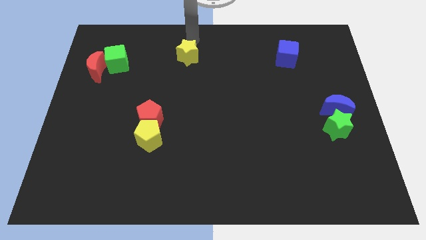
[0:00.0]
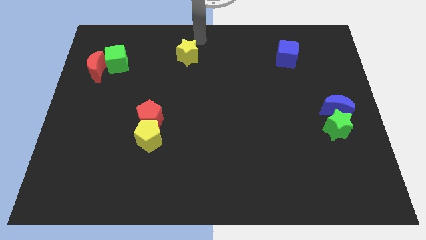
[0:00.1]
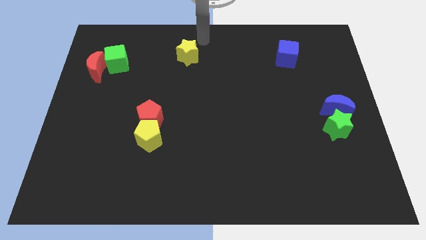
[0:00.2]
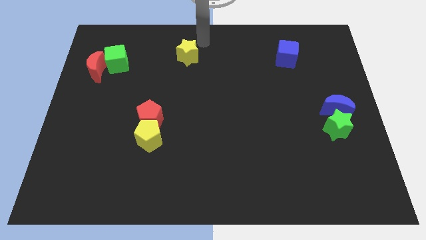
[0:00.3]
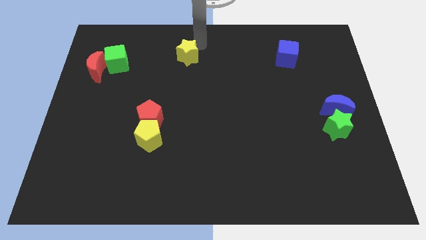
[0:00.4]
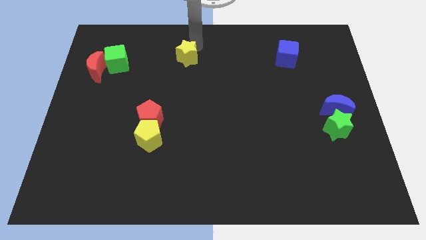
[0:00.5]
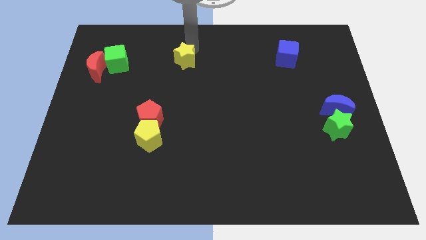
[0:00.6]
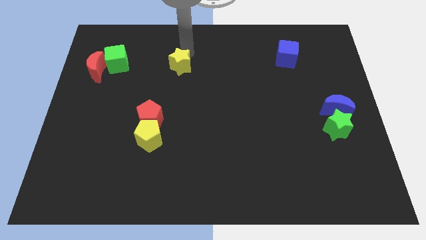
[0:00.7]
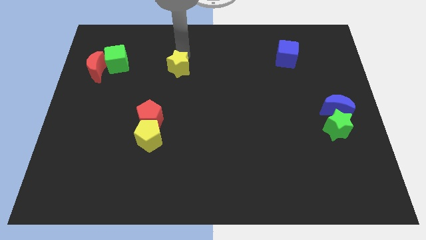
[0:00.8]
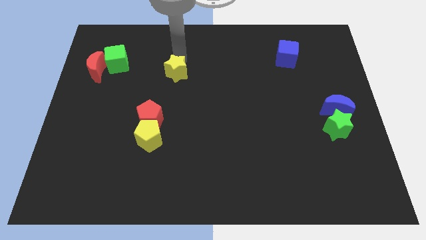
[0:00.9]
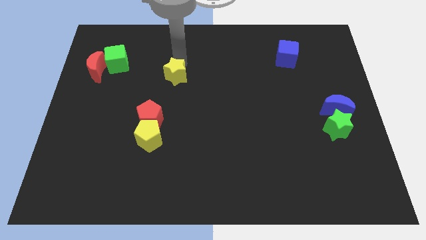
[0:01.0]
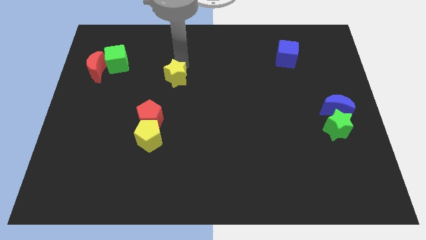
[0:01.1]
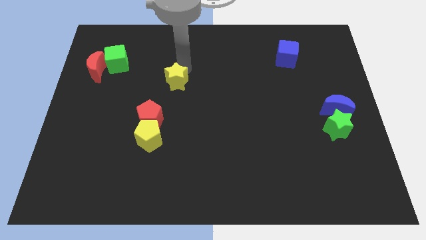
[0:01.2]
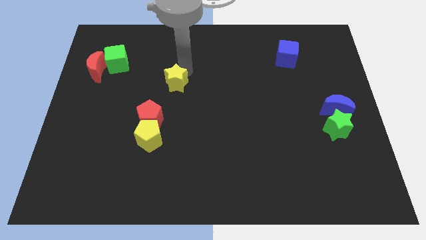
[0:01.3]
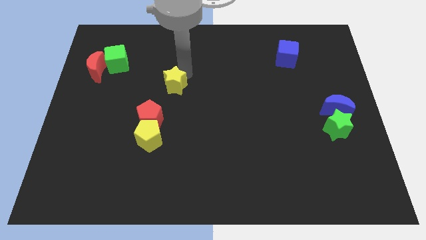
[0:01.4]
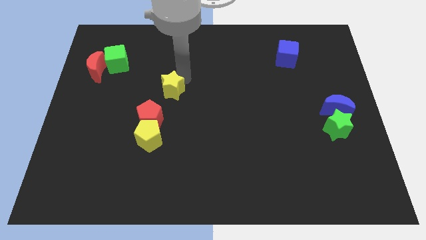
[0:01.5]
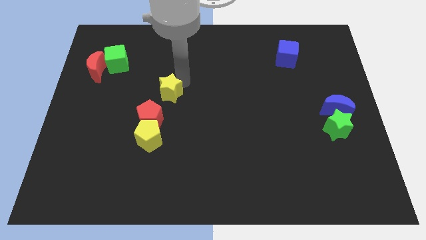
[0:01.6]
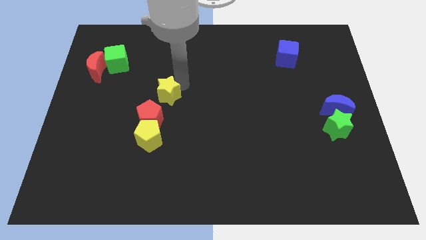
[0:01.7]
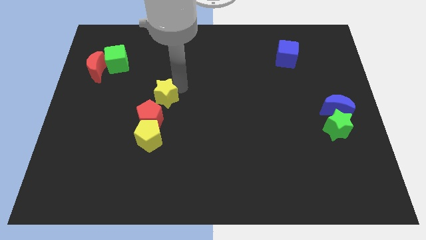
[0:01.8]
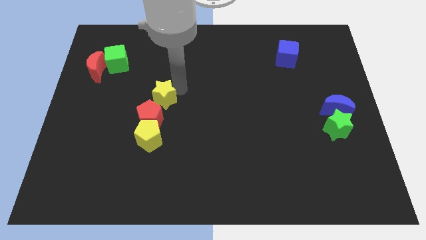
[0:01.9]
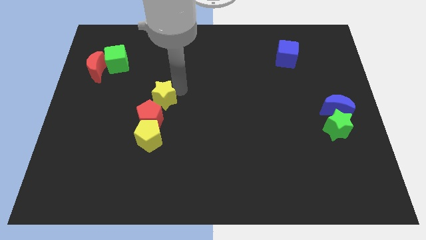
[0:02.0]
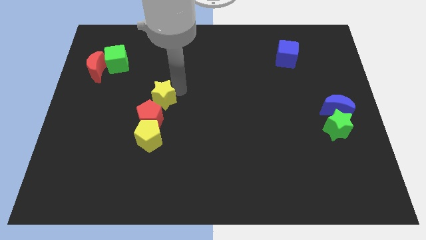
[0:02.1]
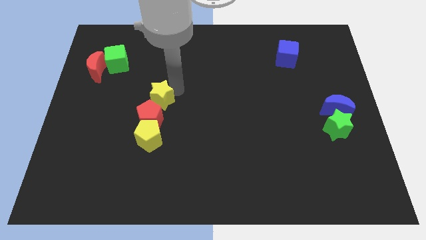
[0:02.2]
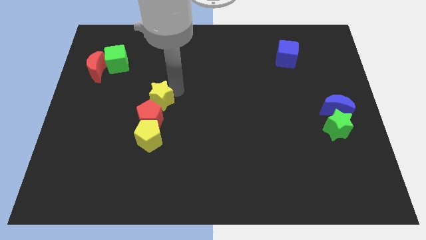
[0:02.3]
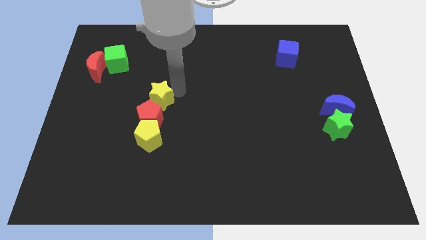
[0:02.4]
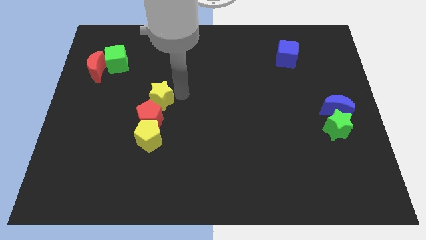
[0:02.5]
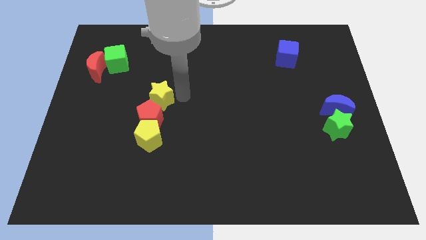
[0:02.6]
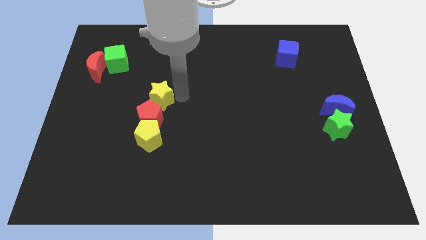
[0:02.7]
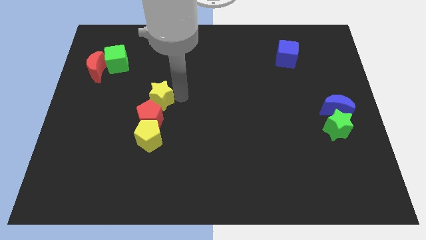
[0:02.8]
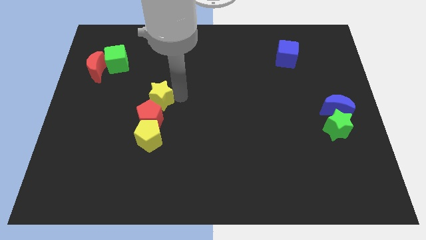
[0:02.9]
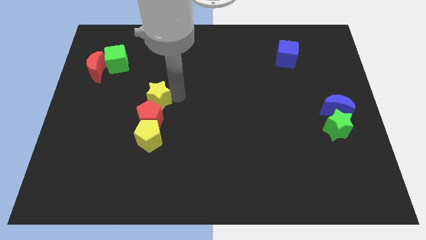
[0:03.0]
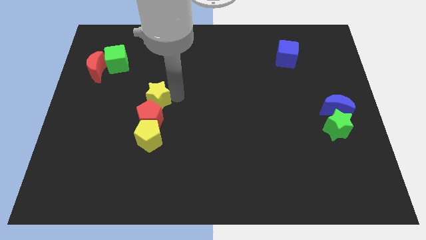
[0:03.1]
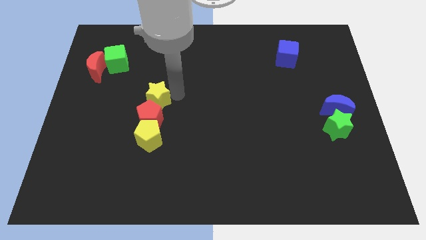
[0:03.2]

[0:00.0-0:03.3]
push the yellow star above the red pentagon

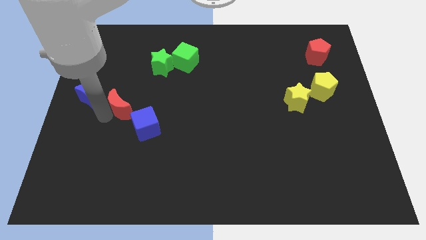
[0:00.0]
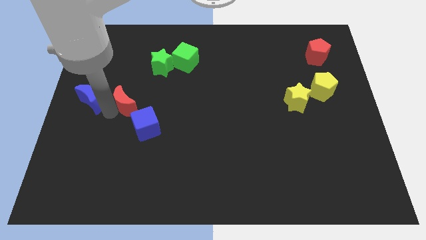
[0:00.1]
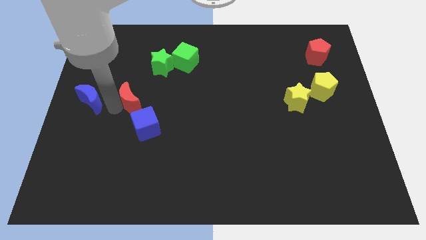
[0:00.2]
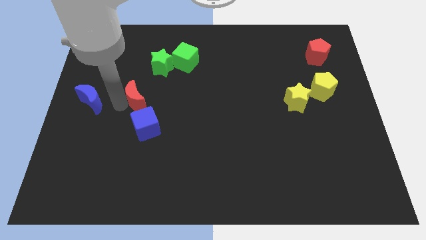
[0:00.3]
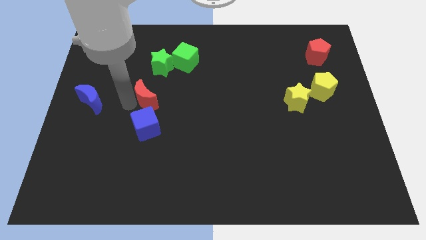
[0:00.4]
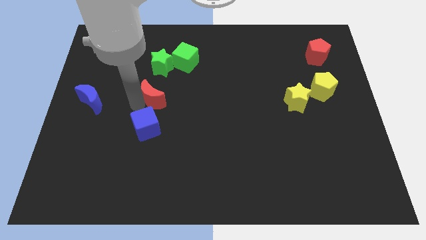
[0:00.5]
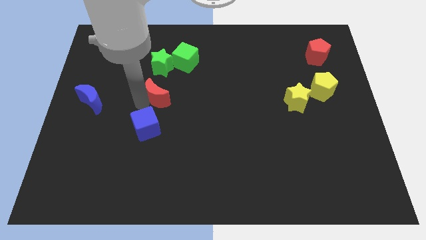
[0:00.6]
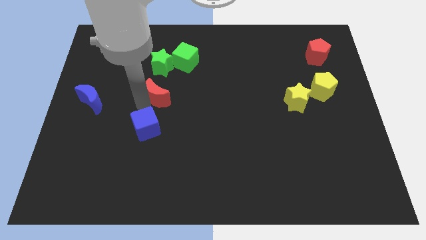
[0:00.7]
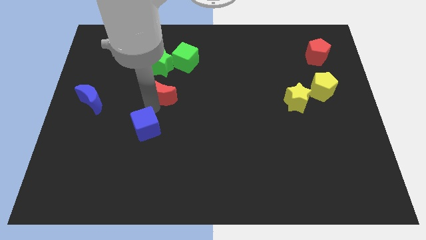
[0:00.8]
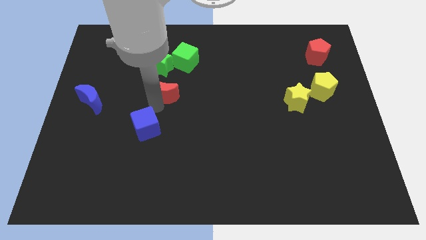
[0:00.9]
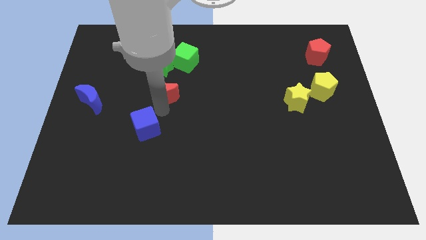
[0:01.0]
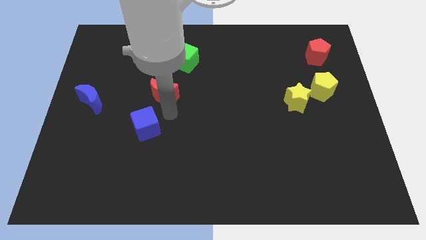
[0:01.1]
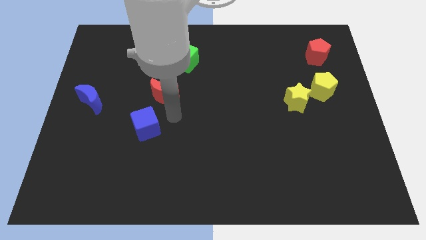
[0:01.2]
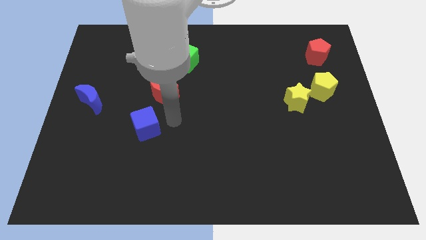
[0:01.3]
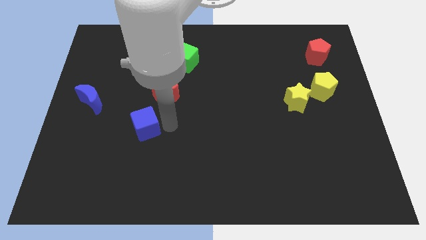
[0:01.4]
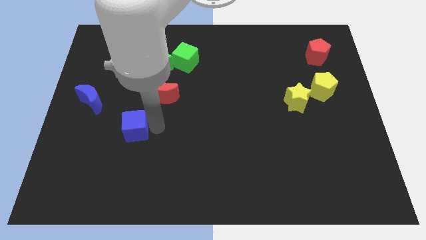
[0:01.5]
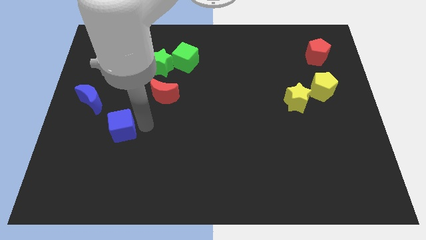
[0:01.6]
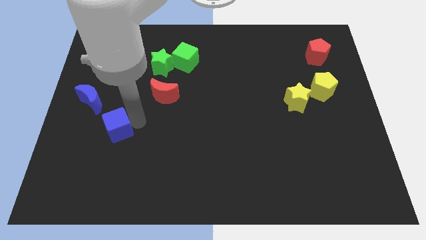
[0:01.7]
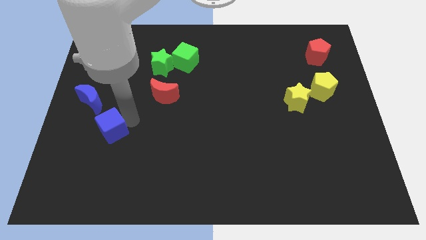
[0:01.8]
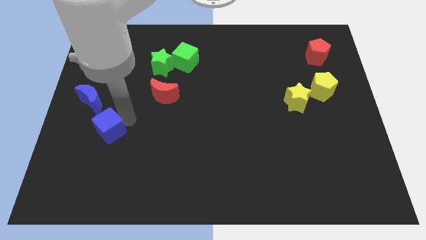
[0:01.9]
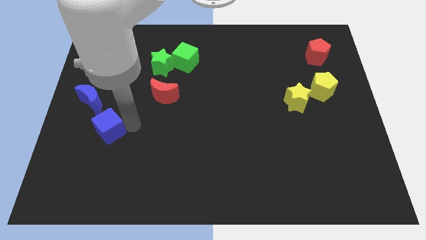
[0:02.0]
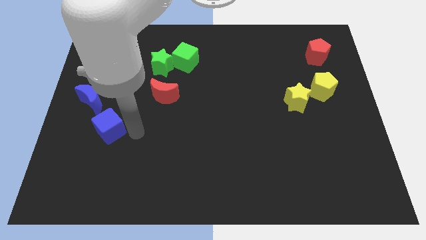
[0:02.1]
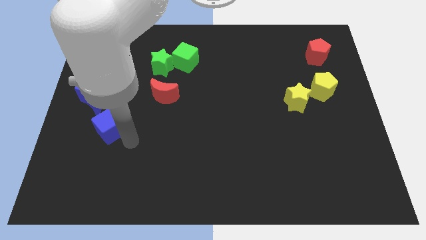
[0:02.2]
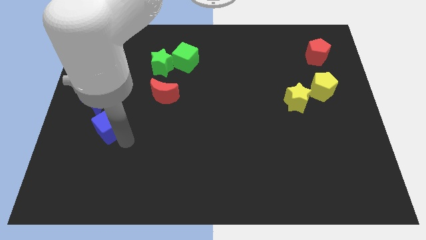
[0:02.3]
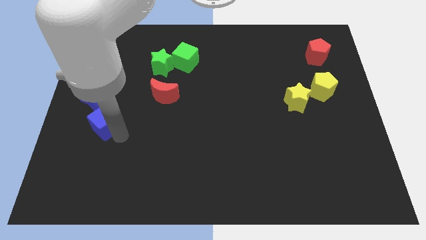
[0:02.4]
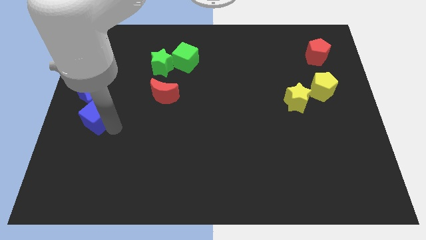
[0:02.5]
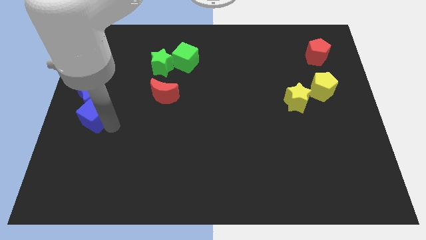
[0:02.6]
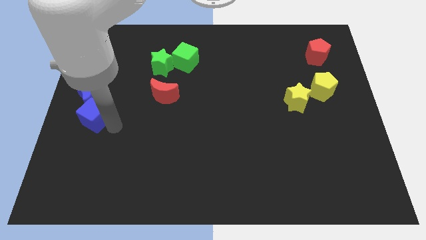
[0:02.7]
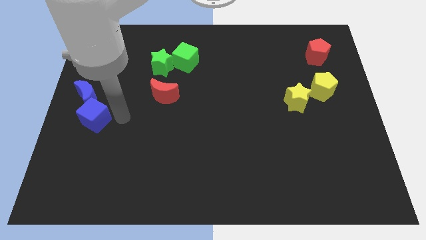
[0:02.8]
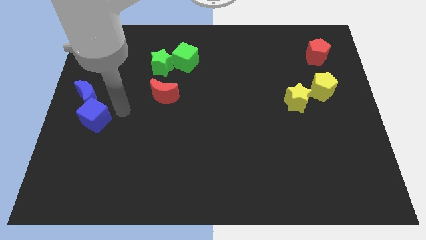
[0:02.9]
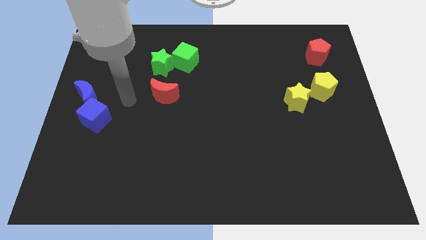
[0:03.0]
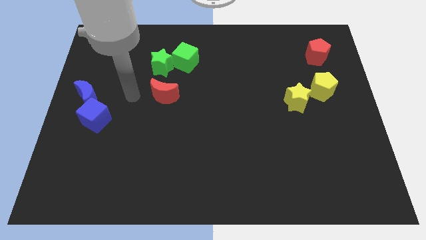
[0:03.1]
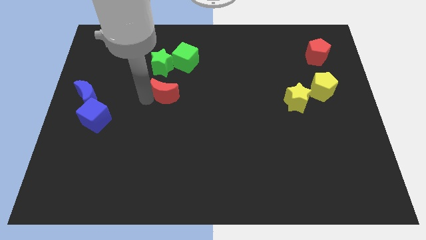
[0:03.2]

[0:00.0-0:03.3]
place blue cube to the bottom of blue moon

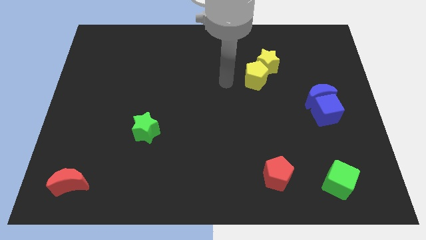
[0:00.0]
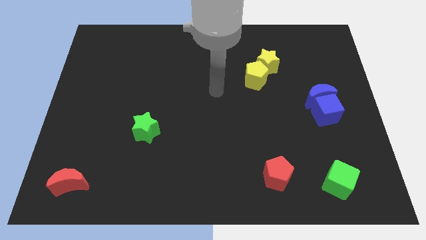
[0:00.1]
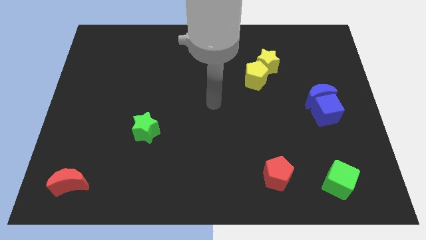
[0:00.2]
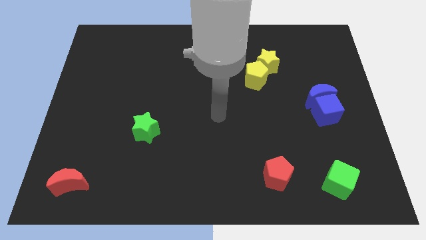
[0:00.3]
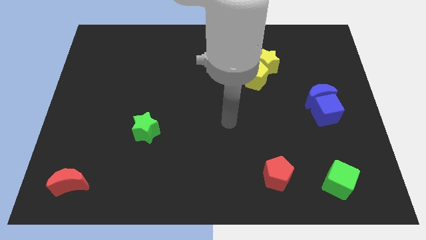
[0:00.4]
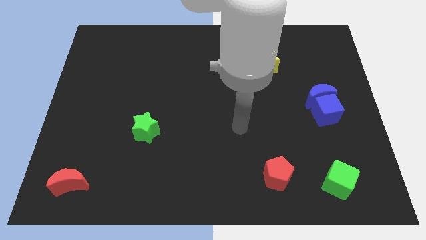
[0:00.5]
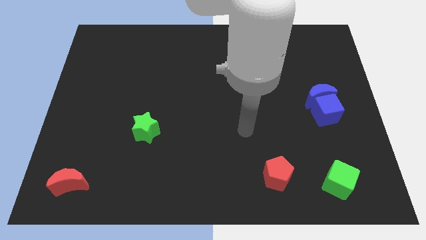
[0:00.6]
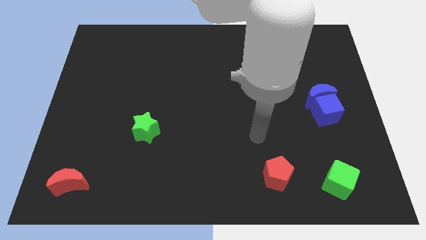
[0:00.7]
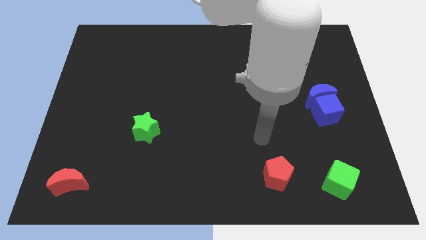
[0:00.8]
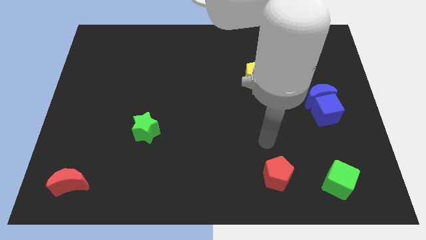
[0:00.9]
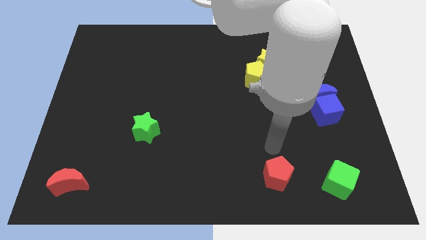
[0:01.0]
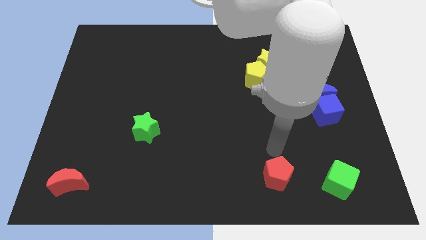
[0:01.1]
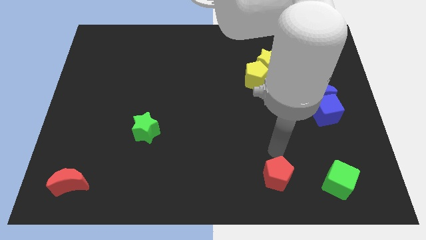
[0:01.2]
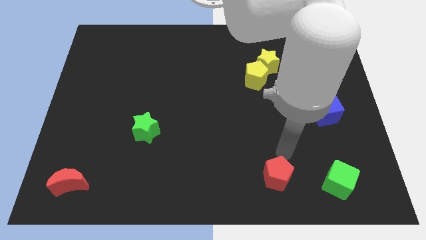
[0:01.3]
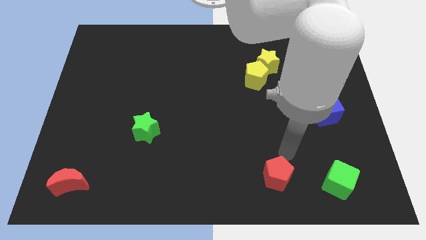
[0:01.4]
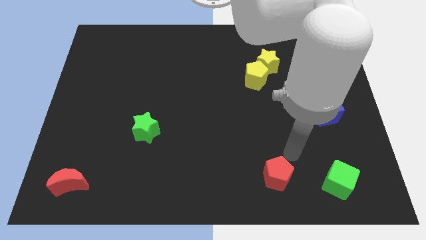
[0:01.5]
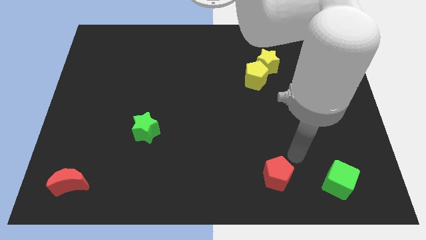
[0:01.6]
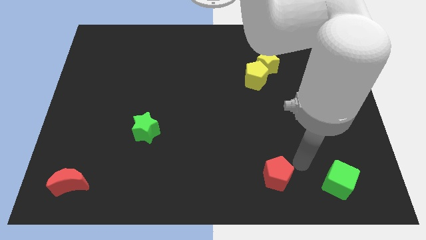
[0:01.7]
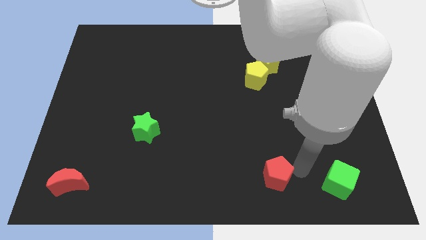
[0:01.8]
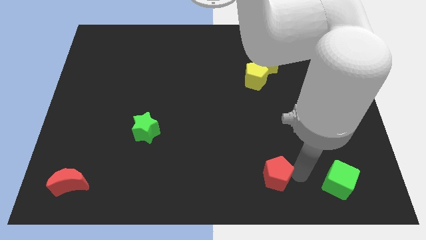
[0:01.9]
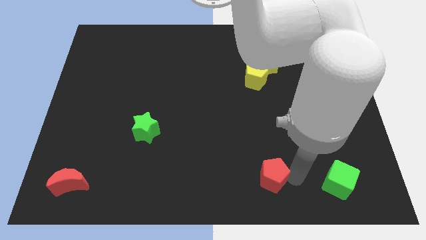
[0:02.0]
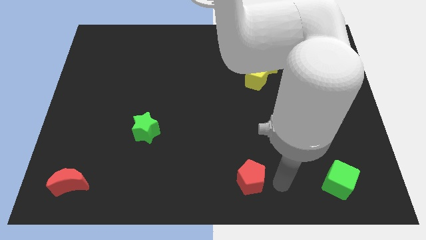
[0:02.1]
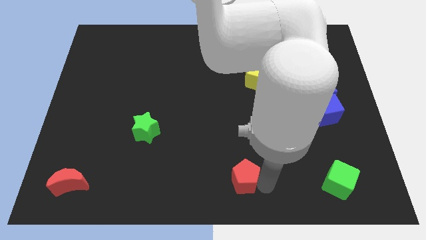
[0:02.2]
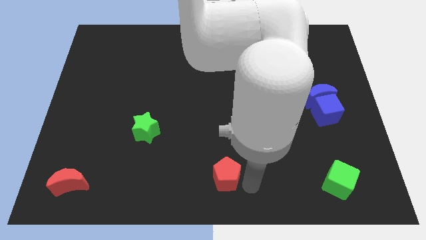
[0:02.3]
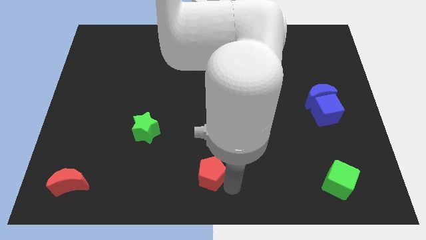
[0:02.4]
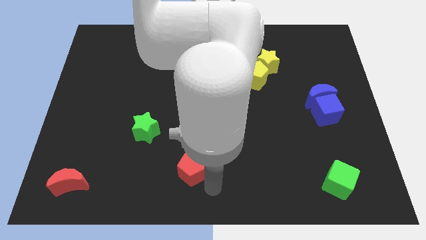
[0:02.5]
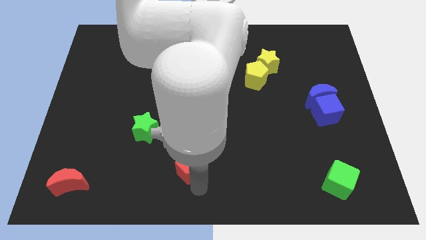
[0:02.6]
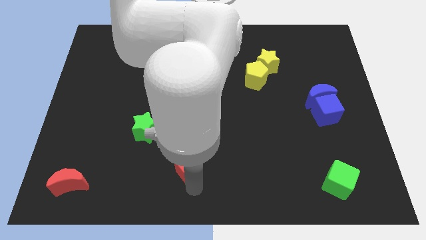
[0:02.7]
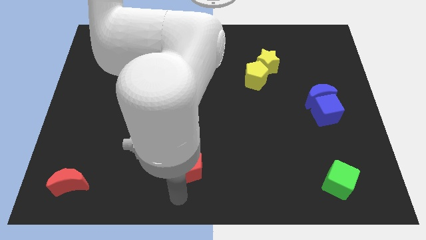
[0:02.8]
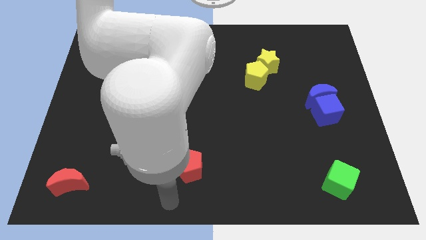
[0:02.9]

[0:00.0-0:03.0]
push the red pentagon to the bottom right of the green star
